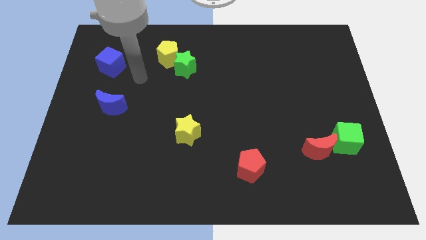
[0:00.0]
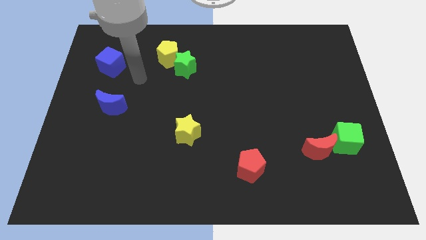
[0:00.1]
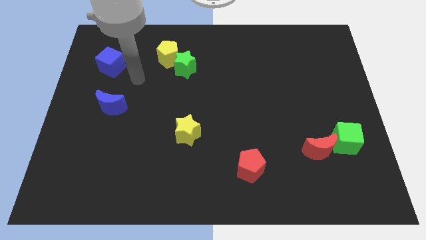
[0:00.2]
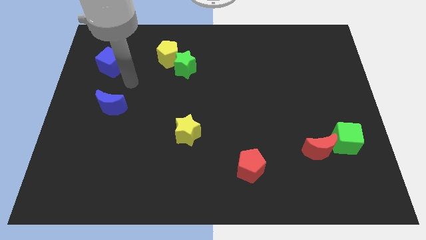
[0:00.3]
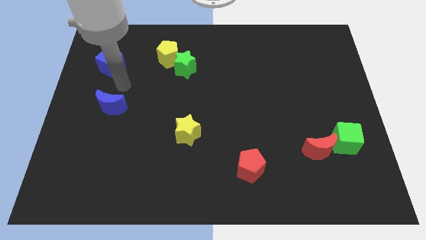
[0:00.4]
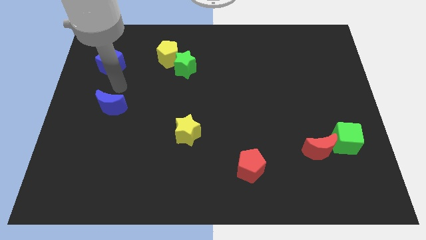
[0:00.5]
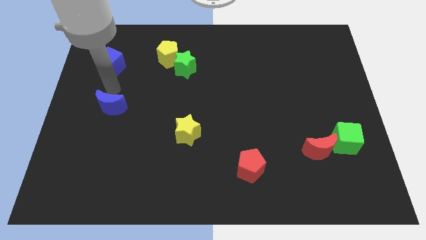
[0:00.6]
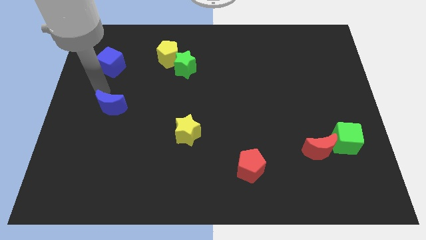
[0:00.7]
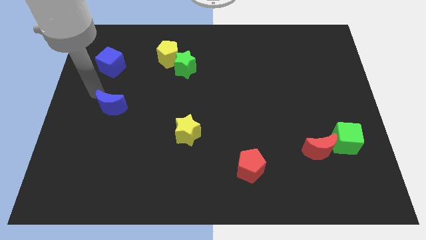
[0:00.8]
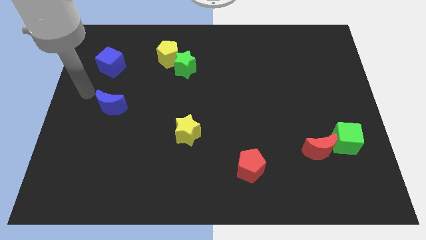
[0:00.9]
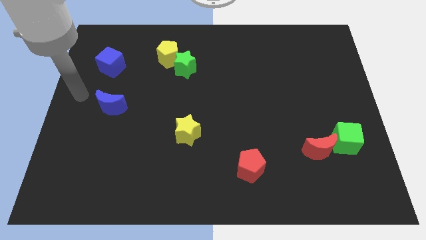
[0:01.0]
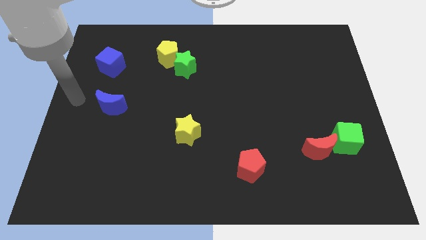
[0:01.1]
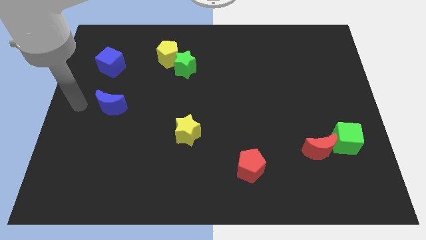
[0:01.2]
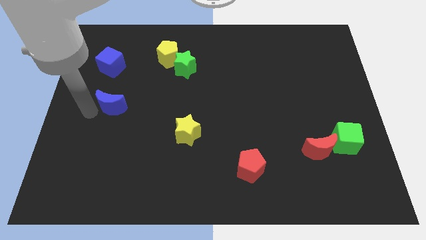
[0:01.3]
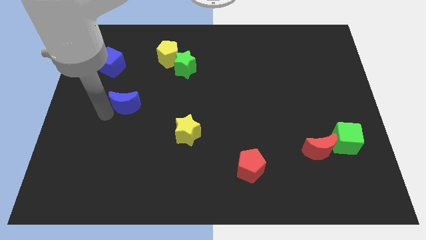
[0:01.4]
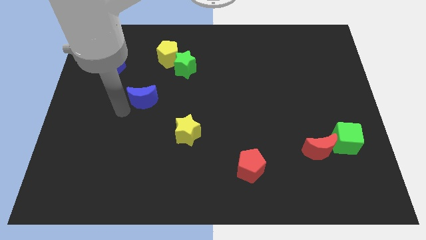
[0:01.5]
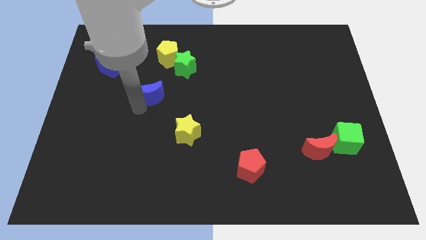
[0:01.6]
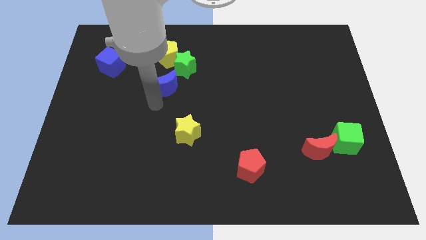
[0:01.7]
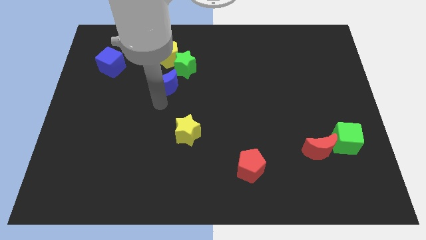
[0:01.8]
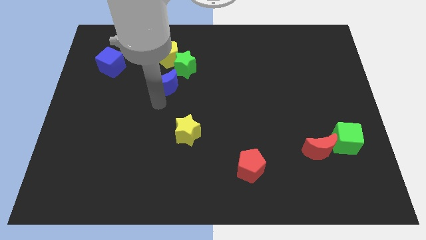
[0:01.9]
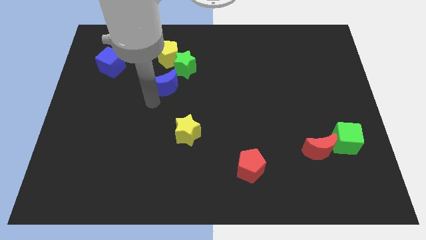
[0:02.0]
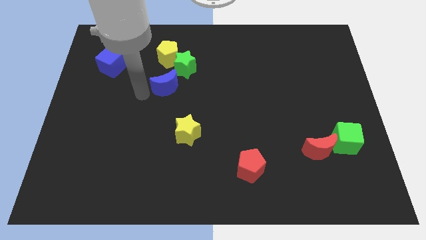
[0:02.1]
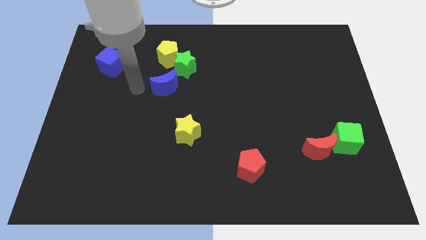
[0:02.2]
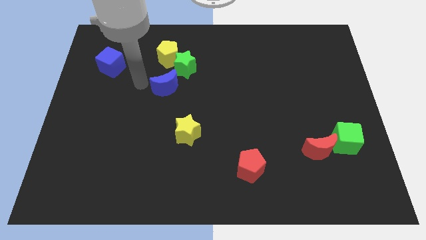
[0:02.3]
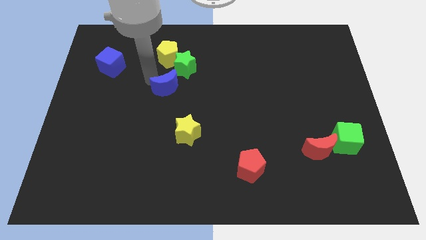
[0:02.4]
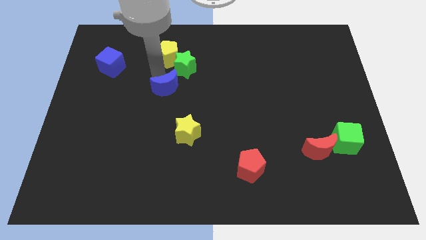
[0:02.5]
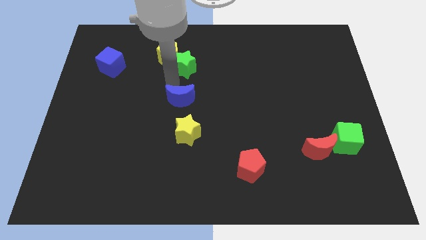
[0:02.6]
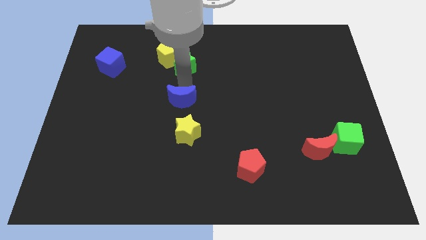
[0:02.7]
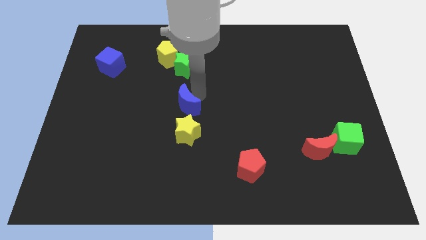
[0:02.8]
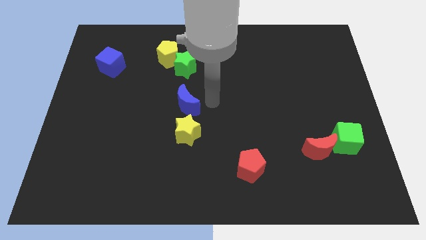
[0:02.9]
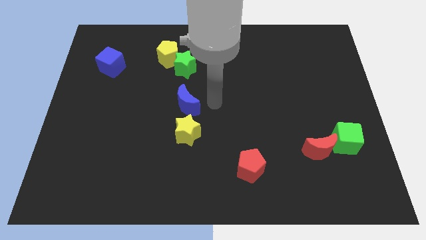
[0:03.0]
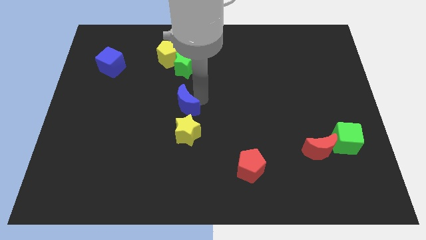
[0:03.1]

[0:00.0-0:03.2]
place the blue crescent above the yellow star

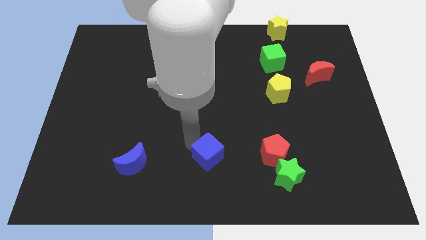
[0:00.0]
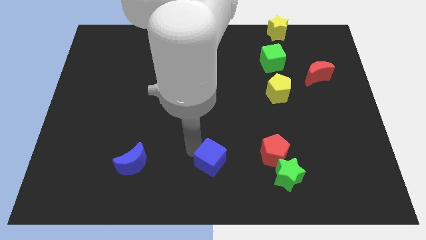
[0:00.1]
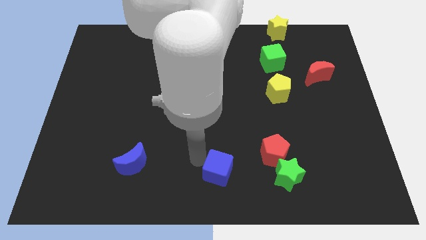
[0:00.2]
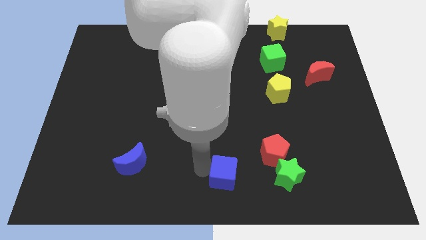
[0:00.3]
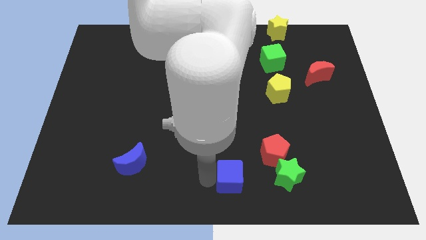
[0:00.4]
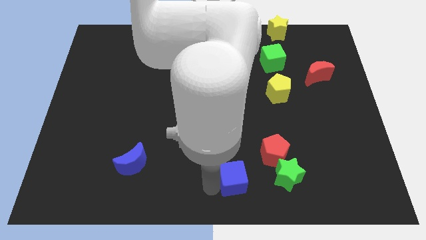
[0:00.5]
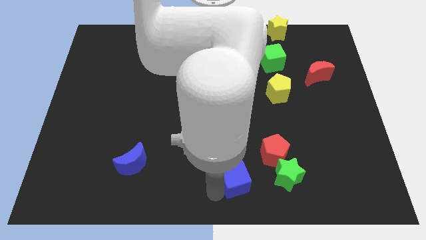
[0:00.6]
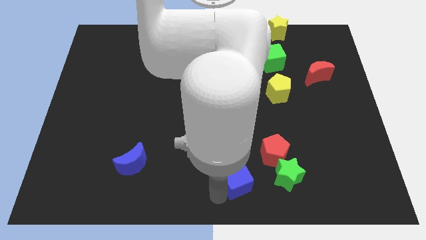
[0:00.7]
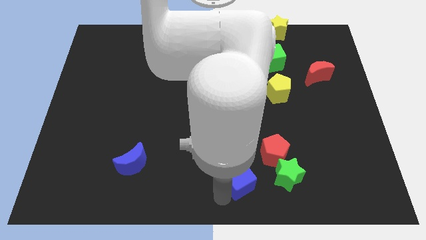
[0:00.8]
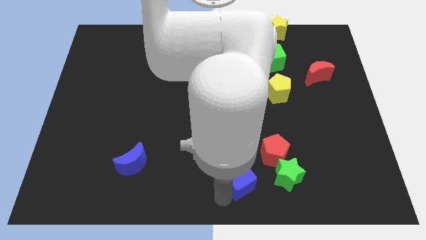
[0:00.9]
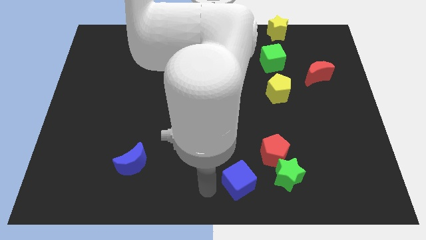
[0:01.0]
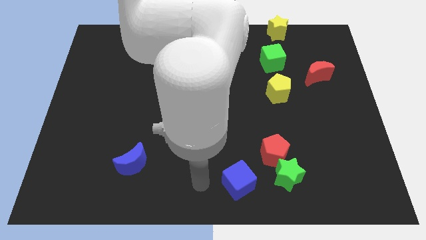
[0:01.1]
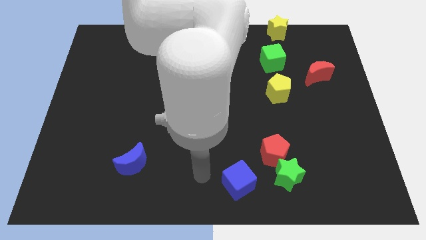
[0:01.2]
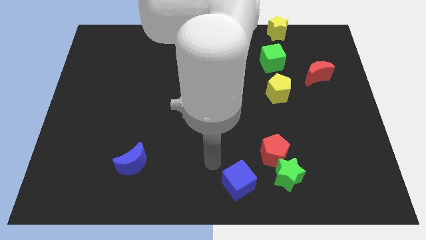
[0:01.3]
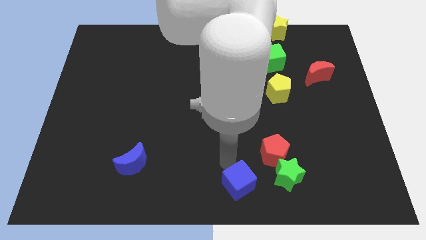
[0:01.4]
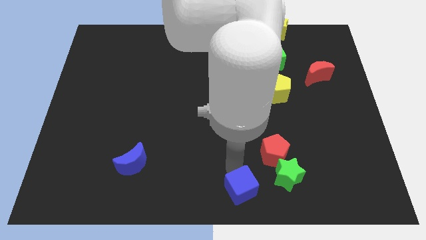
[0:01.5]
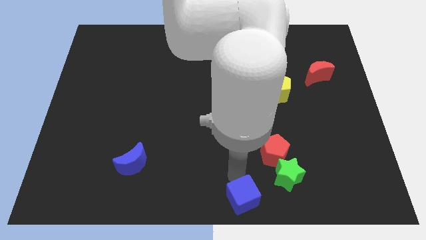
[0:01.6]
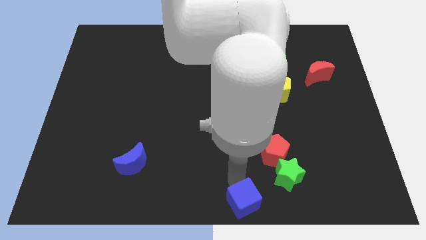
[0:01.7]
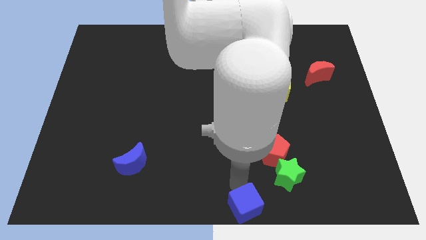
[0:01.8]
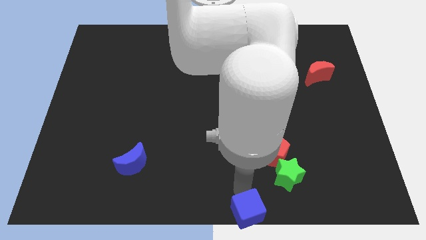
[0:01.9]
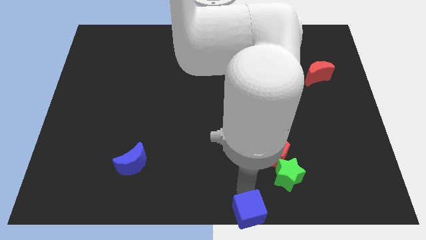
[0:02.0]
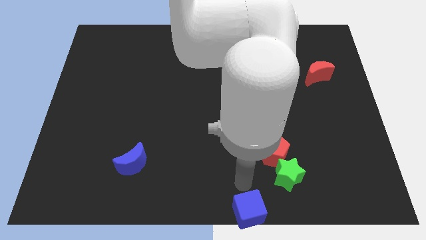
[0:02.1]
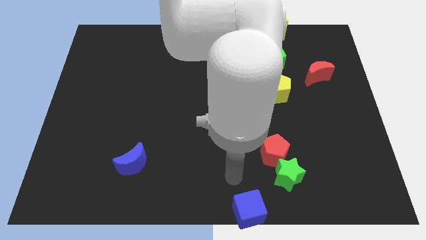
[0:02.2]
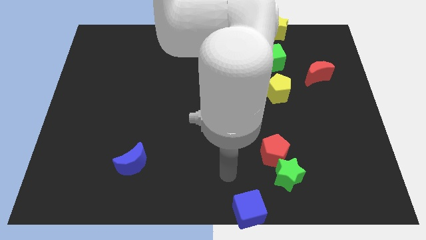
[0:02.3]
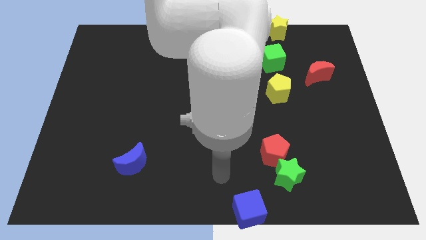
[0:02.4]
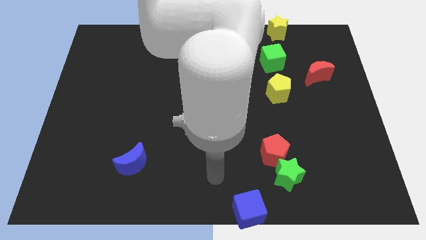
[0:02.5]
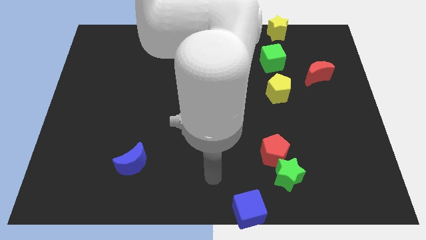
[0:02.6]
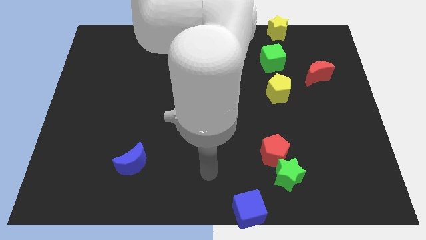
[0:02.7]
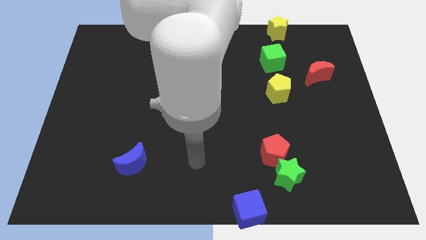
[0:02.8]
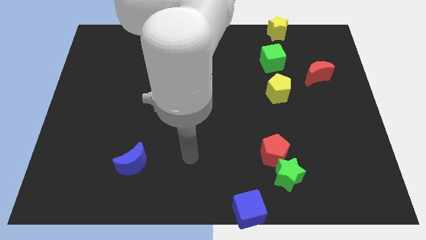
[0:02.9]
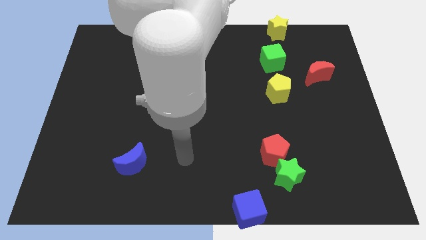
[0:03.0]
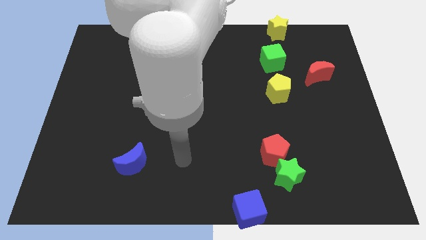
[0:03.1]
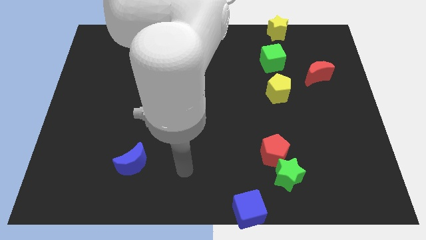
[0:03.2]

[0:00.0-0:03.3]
move the blue cube to the bottom center of the board

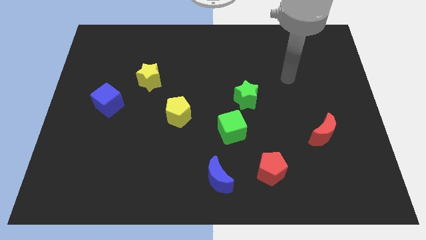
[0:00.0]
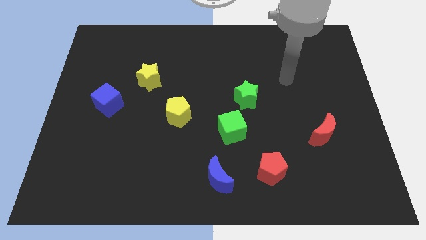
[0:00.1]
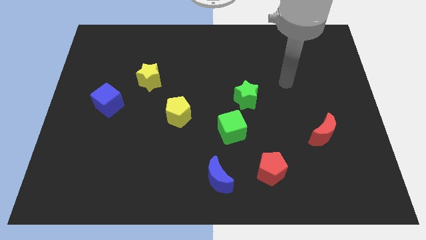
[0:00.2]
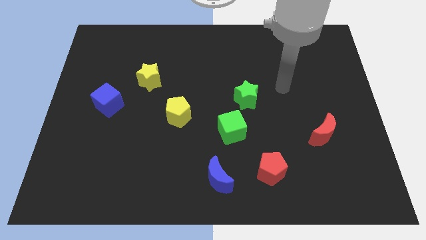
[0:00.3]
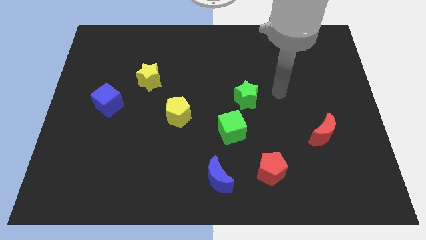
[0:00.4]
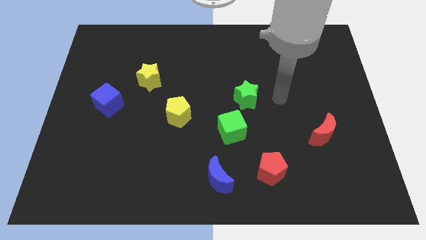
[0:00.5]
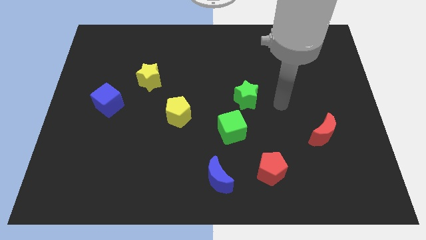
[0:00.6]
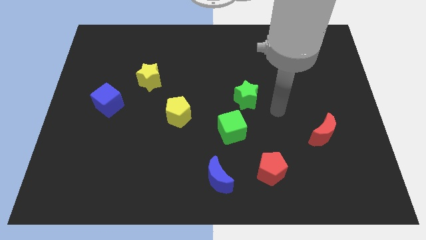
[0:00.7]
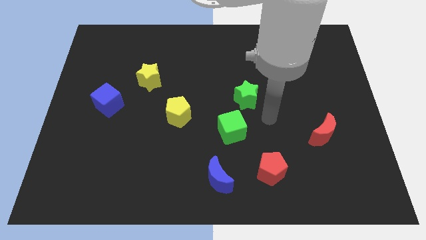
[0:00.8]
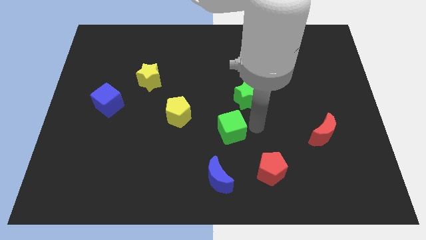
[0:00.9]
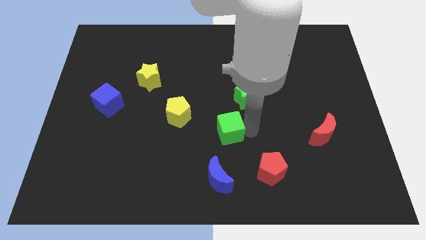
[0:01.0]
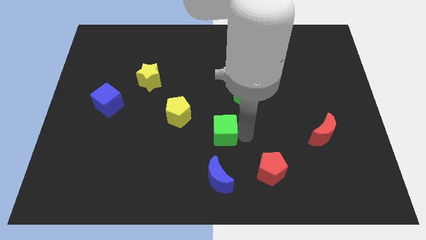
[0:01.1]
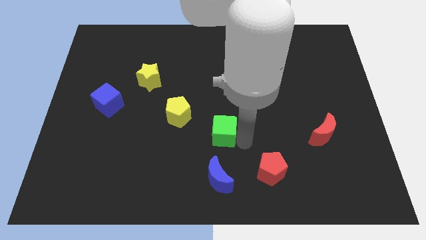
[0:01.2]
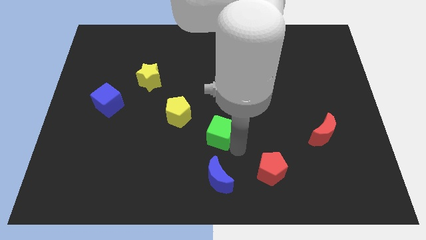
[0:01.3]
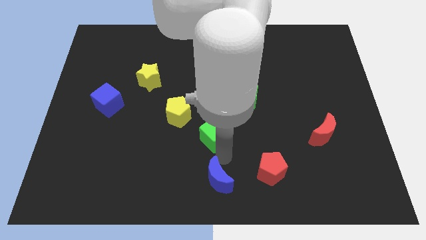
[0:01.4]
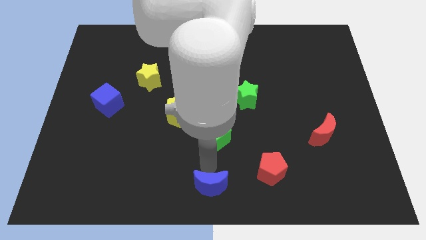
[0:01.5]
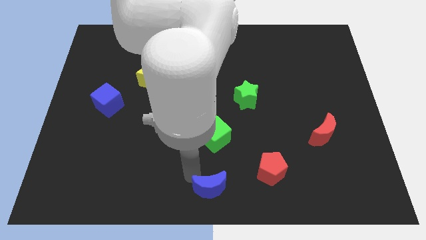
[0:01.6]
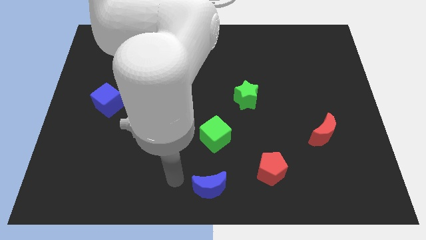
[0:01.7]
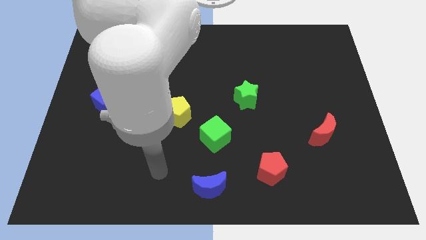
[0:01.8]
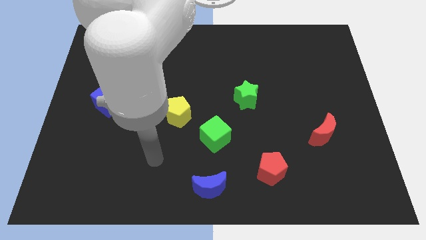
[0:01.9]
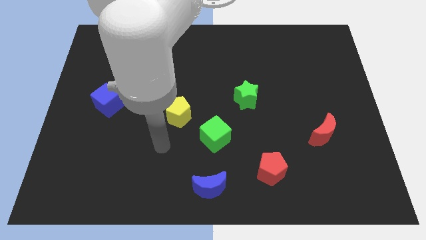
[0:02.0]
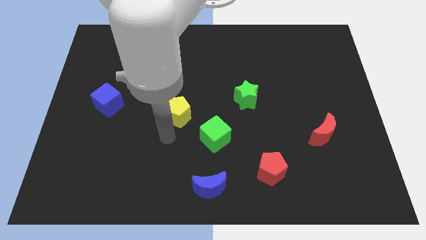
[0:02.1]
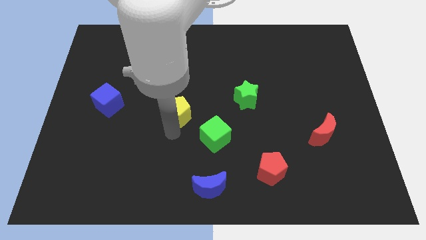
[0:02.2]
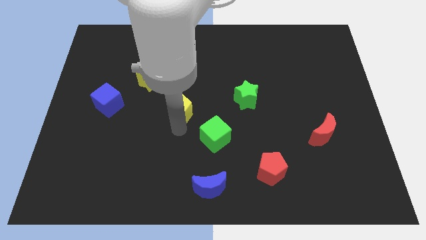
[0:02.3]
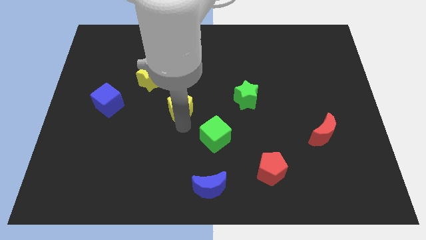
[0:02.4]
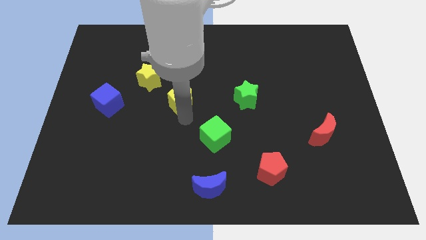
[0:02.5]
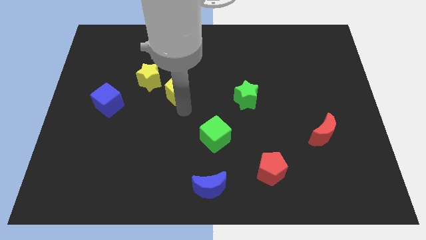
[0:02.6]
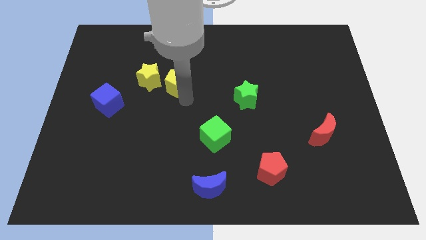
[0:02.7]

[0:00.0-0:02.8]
slightly touch the green cube blue moon and push the yellow pentagon towards yellow star
